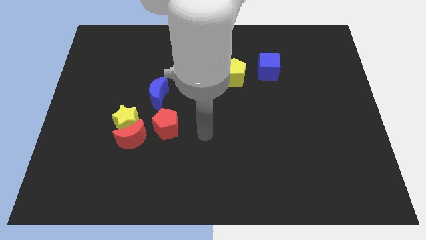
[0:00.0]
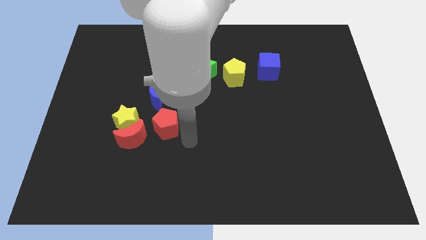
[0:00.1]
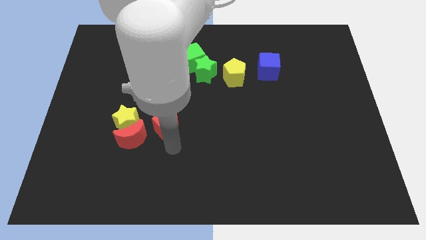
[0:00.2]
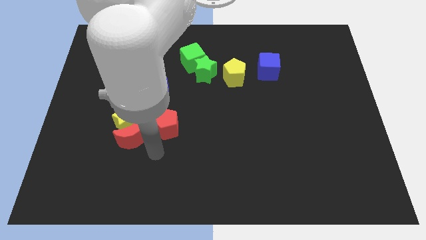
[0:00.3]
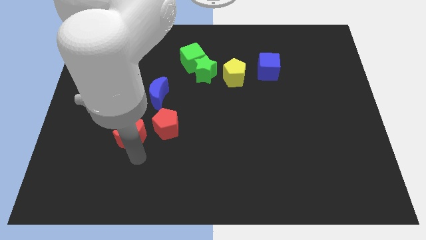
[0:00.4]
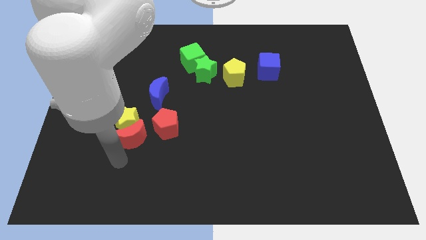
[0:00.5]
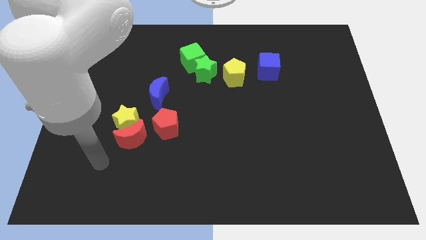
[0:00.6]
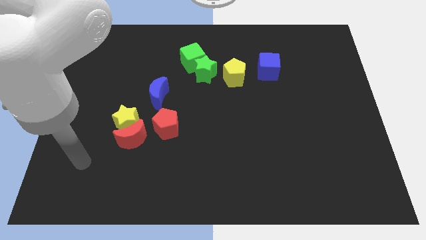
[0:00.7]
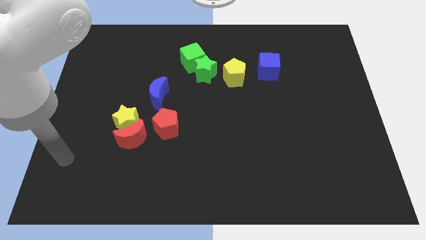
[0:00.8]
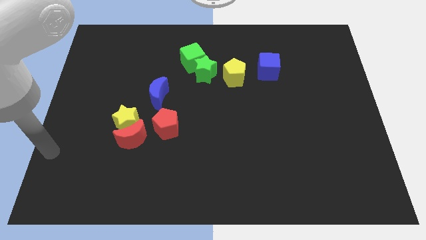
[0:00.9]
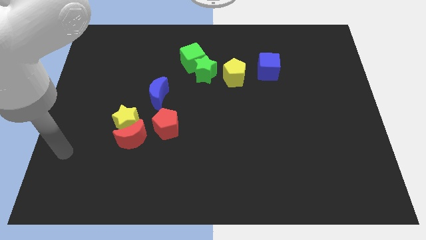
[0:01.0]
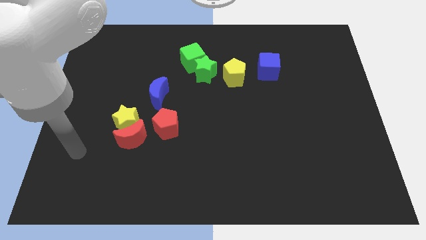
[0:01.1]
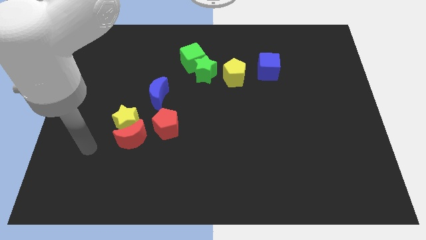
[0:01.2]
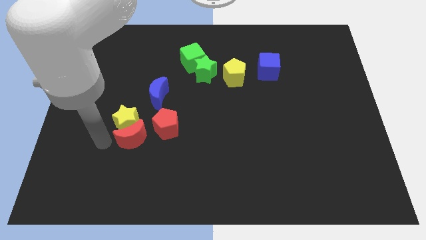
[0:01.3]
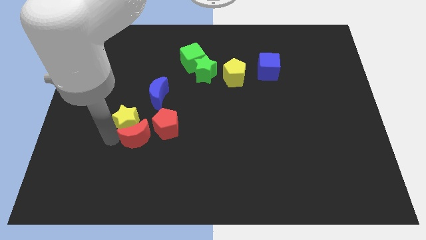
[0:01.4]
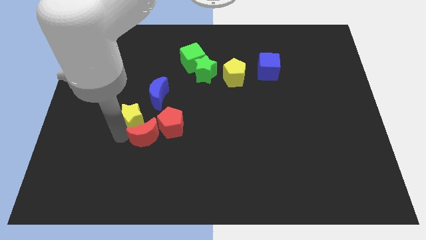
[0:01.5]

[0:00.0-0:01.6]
move the arm towards the yellow star

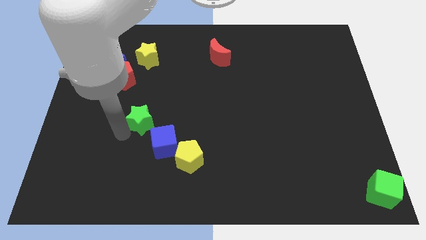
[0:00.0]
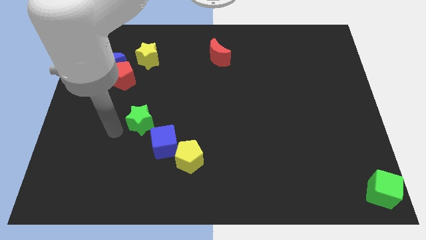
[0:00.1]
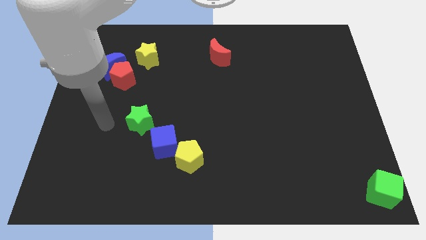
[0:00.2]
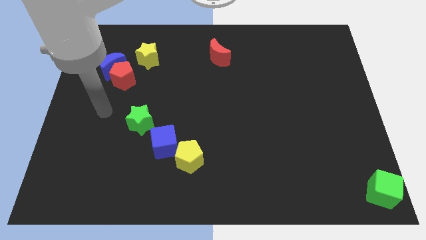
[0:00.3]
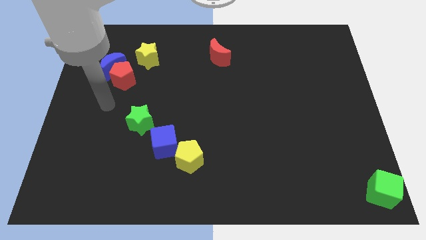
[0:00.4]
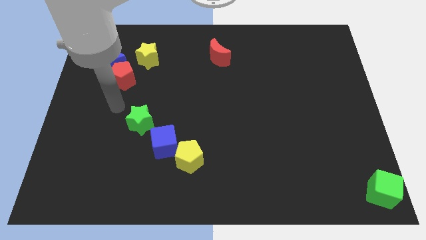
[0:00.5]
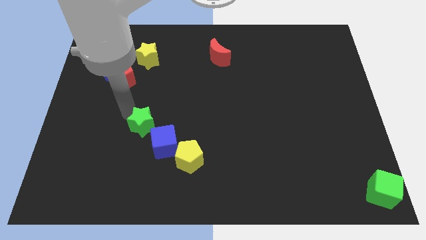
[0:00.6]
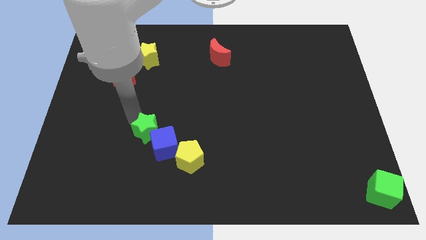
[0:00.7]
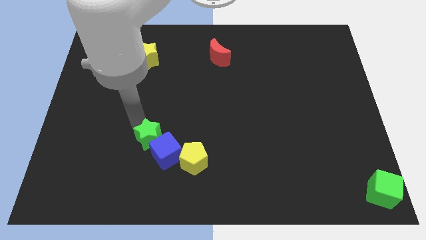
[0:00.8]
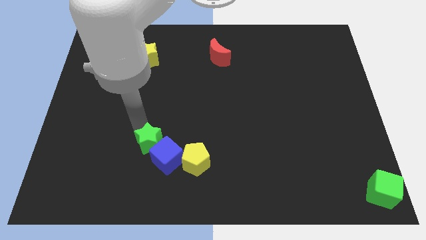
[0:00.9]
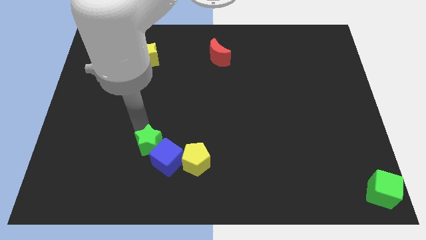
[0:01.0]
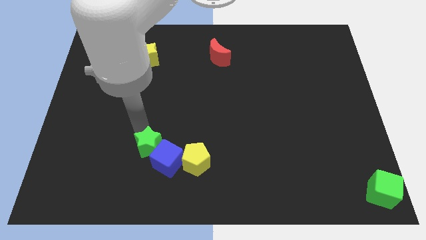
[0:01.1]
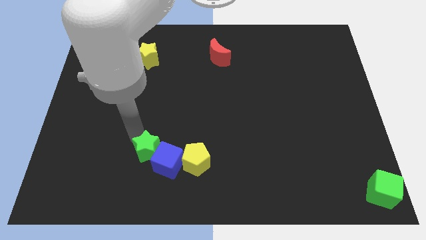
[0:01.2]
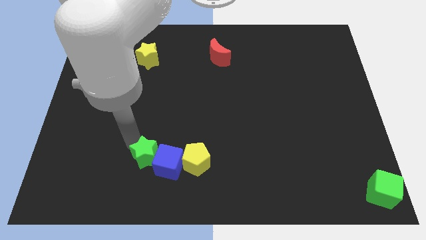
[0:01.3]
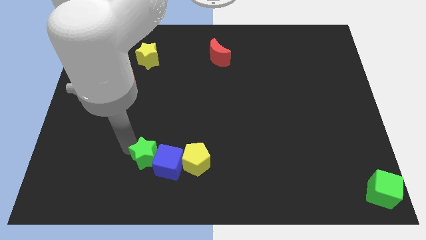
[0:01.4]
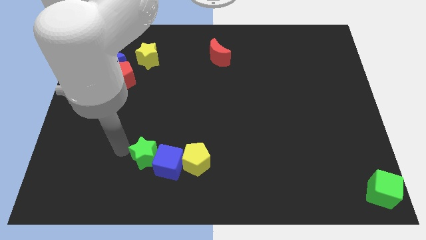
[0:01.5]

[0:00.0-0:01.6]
push the green star into the blue cube

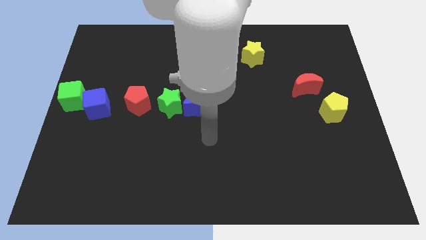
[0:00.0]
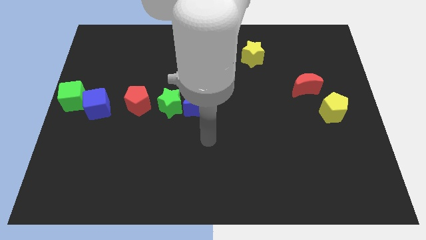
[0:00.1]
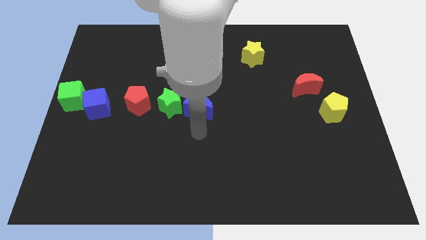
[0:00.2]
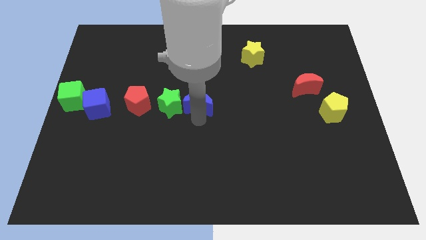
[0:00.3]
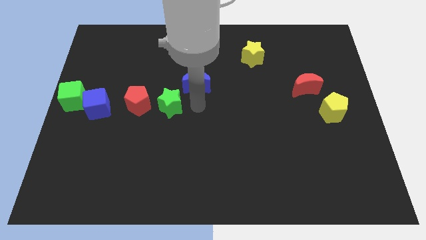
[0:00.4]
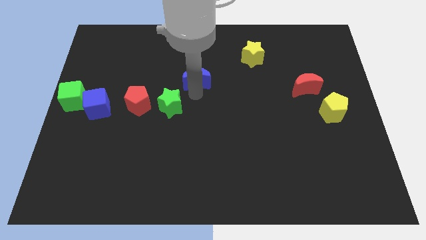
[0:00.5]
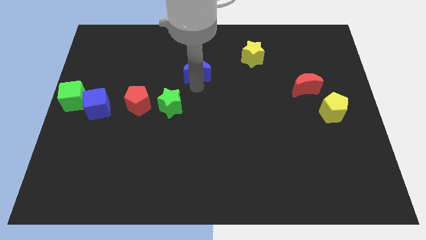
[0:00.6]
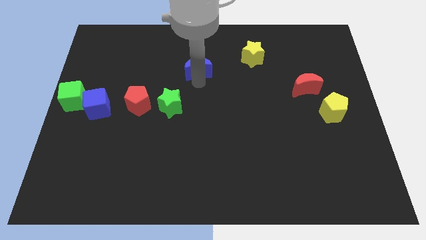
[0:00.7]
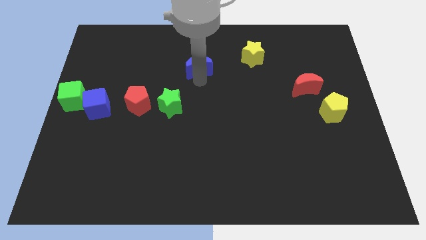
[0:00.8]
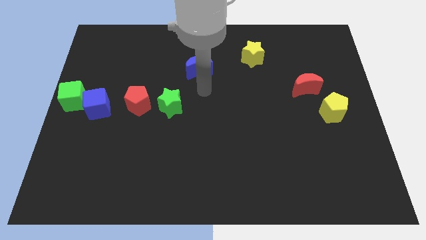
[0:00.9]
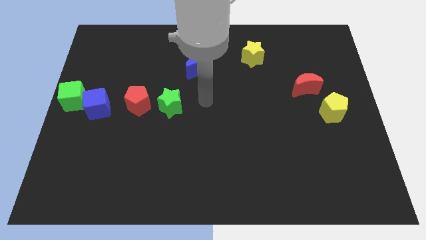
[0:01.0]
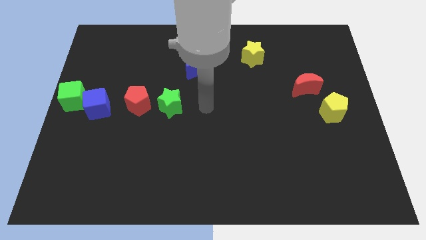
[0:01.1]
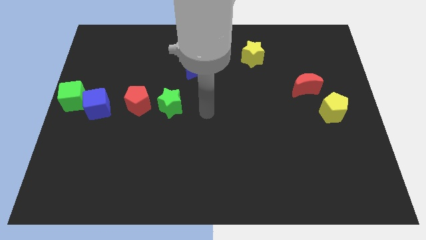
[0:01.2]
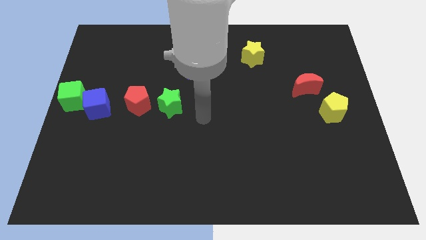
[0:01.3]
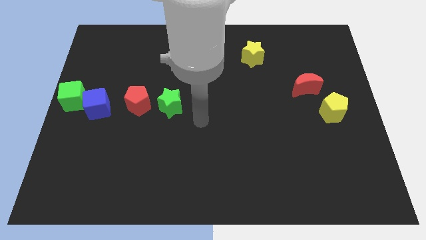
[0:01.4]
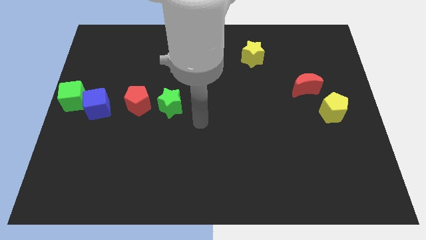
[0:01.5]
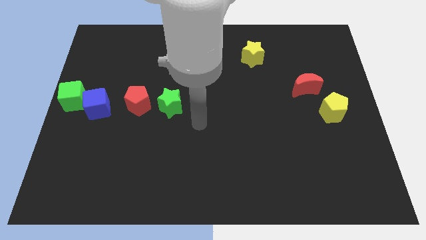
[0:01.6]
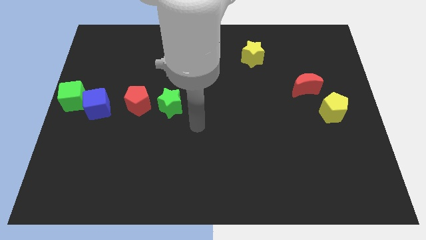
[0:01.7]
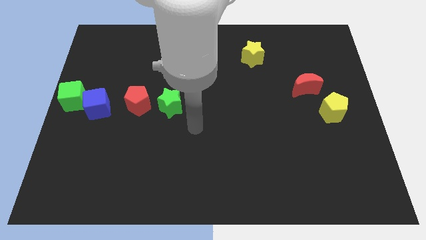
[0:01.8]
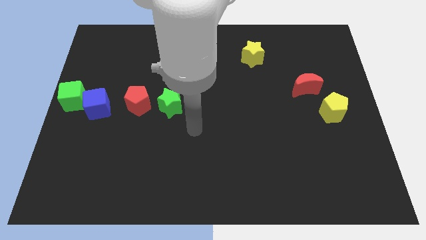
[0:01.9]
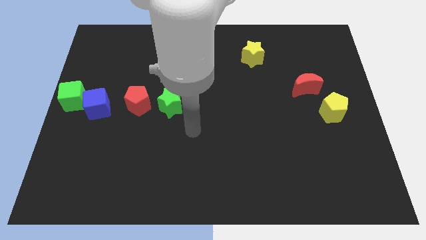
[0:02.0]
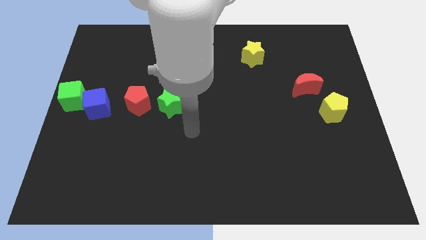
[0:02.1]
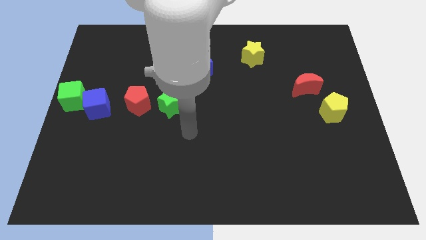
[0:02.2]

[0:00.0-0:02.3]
move the blue moon towards the top of the board

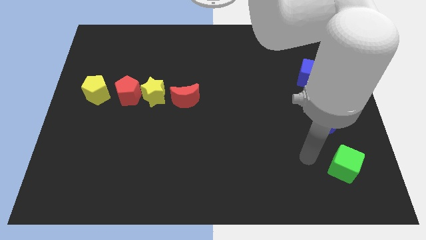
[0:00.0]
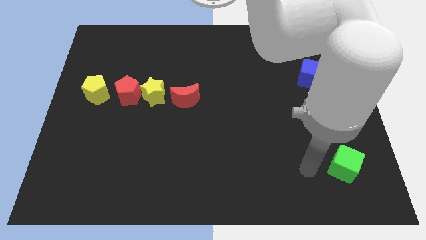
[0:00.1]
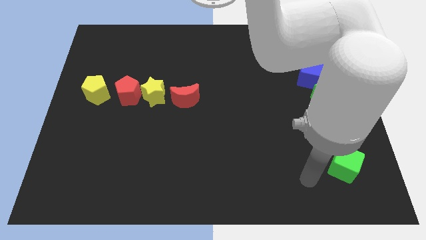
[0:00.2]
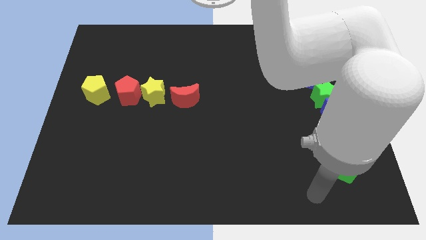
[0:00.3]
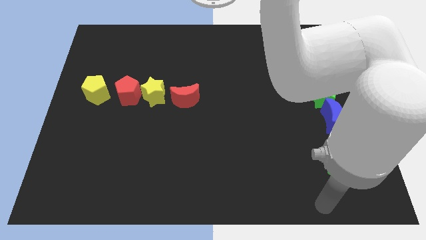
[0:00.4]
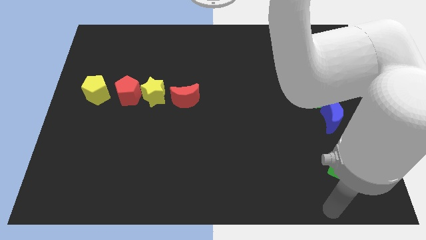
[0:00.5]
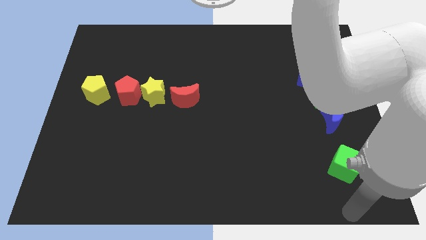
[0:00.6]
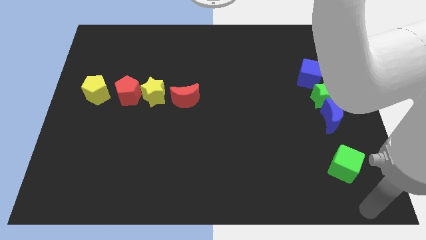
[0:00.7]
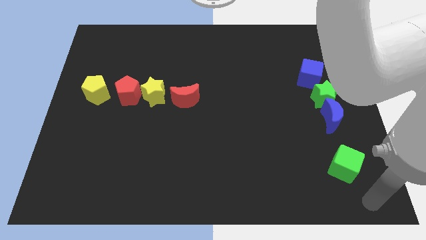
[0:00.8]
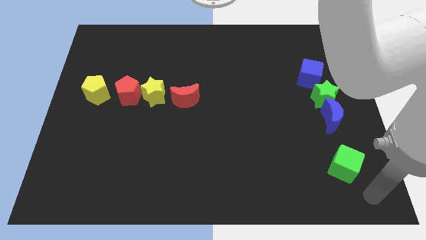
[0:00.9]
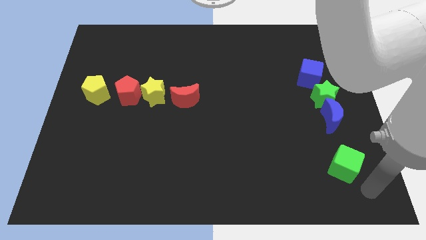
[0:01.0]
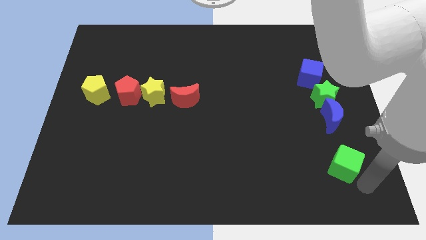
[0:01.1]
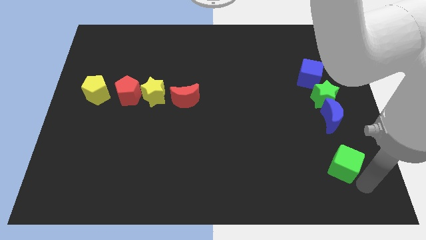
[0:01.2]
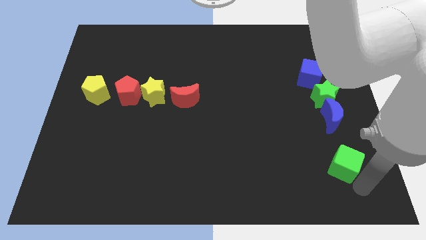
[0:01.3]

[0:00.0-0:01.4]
place the arm close to the green cube

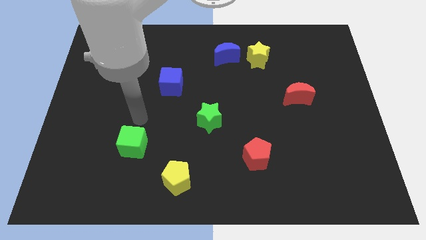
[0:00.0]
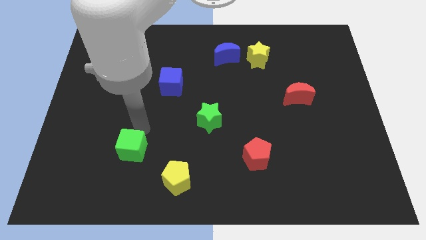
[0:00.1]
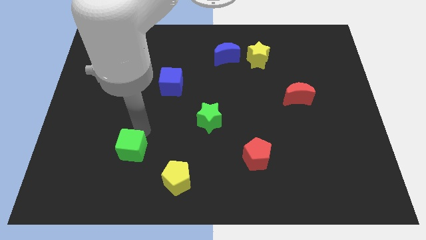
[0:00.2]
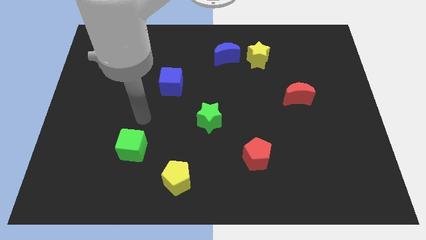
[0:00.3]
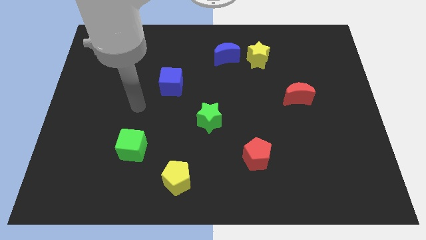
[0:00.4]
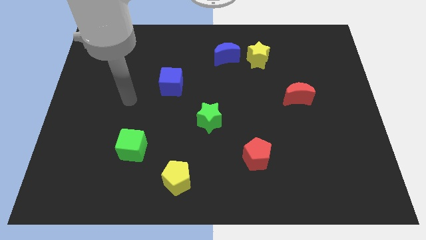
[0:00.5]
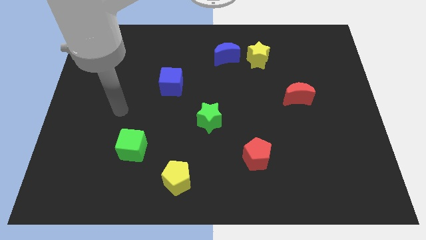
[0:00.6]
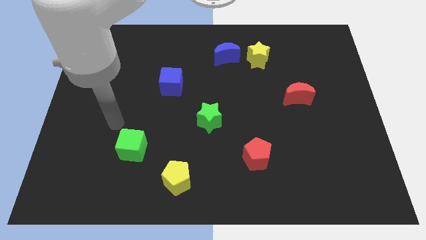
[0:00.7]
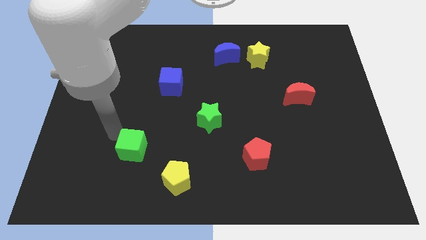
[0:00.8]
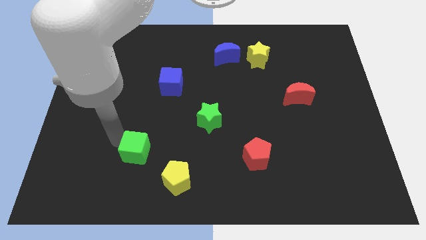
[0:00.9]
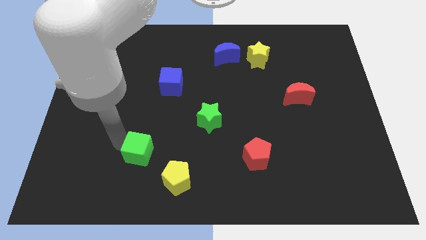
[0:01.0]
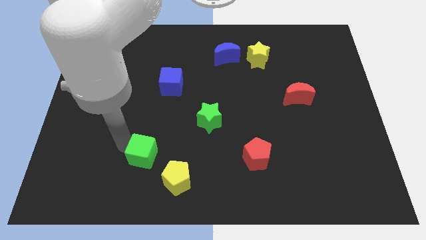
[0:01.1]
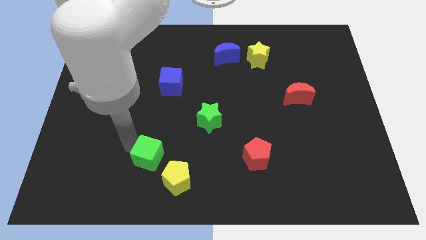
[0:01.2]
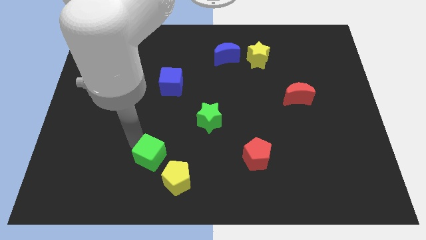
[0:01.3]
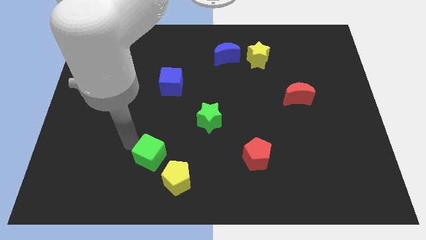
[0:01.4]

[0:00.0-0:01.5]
slide the green cube close to the yellow pentagon

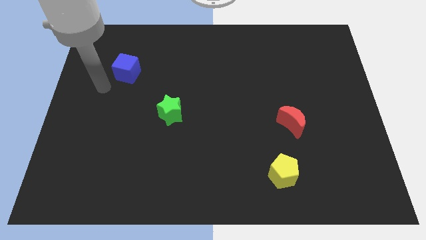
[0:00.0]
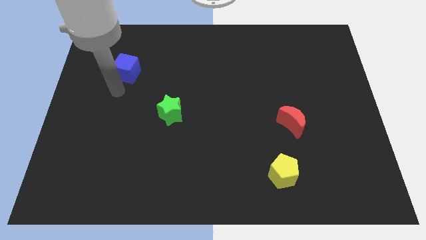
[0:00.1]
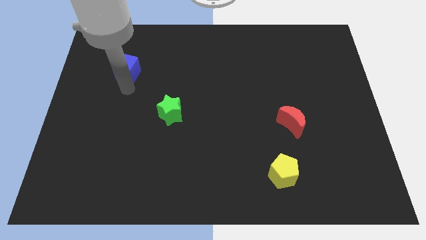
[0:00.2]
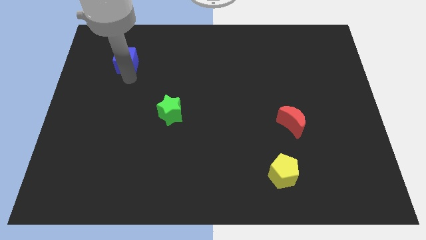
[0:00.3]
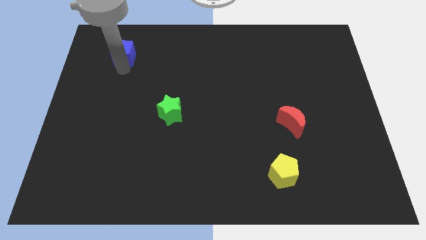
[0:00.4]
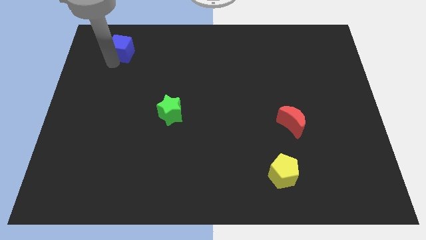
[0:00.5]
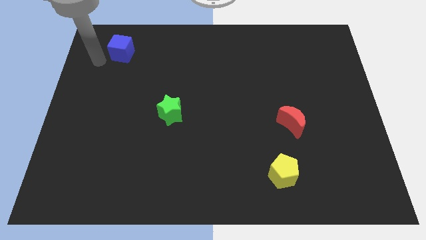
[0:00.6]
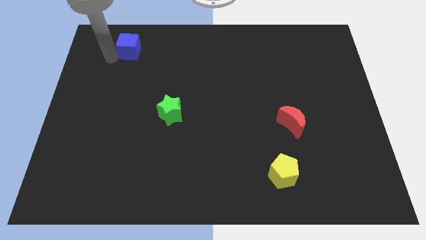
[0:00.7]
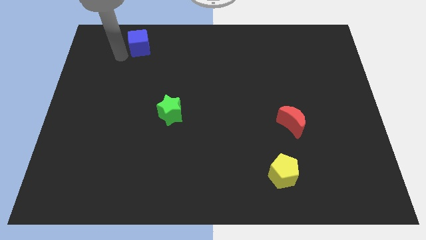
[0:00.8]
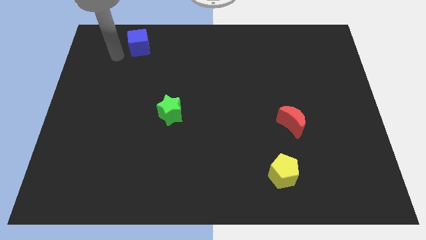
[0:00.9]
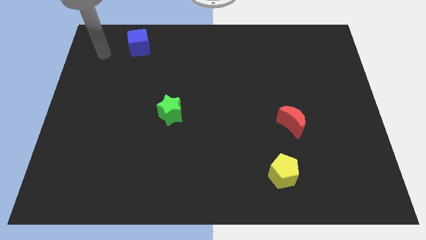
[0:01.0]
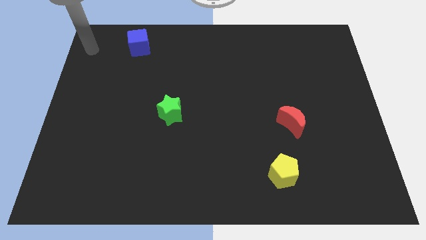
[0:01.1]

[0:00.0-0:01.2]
push the blue upwards
